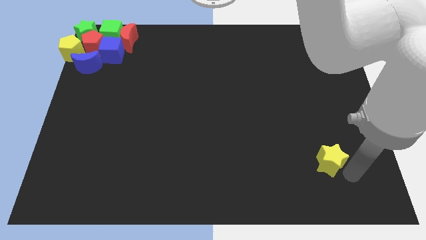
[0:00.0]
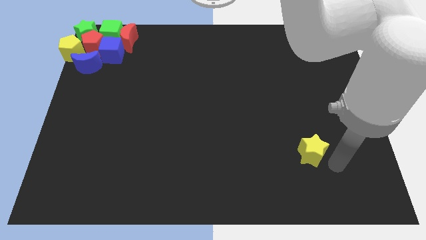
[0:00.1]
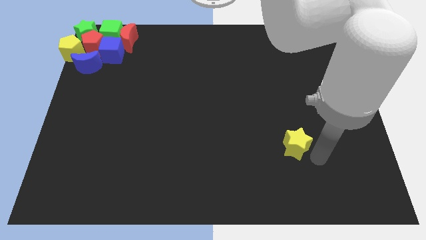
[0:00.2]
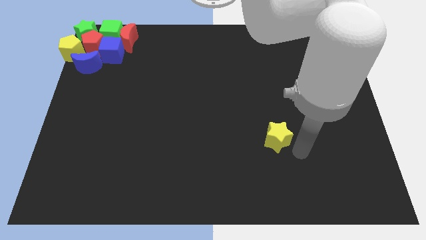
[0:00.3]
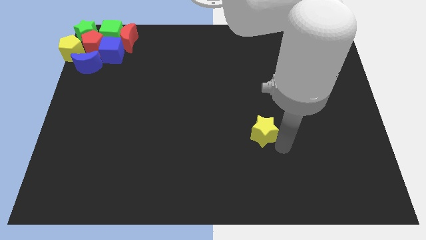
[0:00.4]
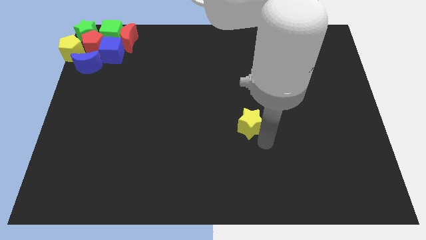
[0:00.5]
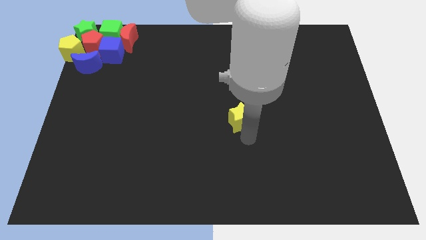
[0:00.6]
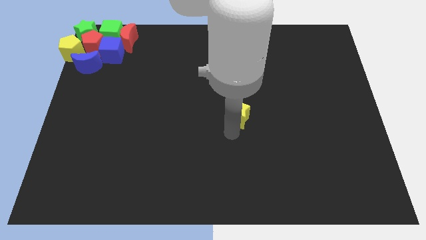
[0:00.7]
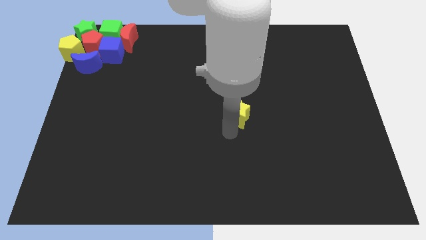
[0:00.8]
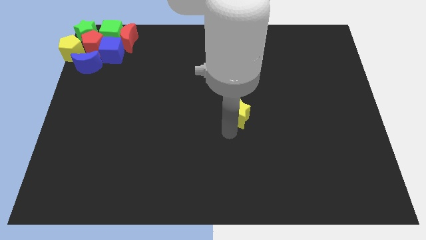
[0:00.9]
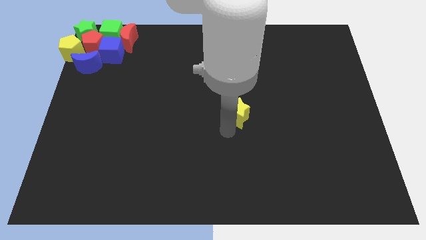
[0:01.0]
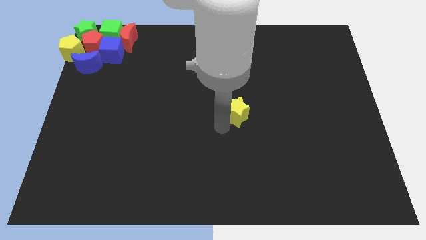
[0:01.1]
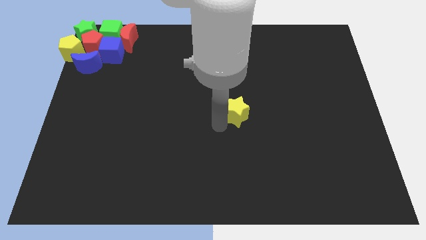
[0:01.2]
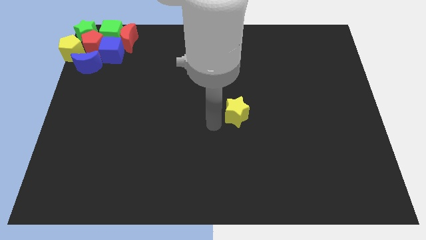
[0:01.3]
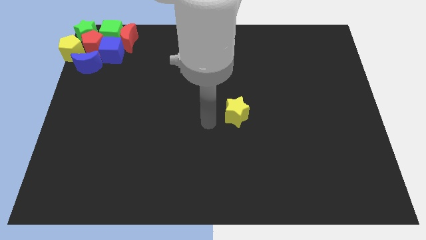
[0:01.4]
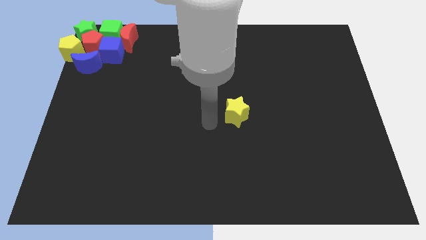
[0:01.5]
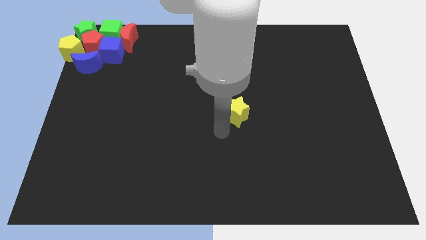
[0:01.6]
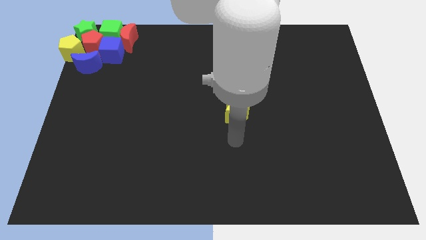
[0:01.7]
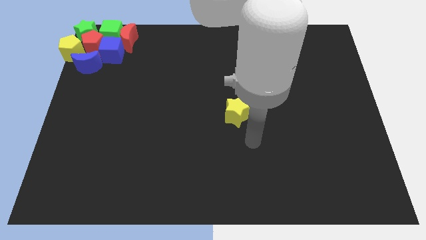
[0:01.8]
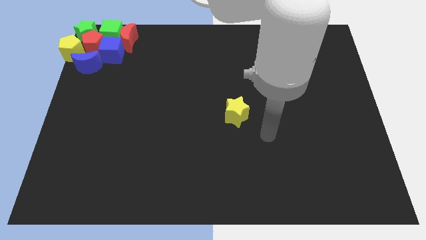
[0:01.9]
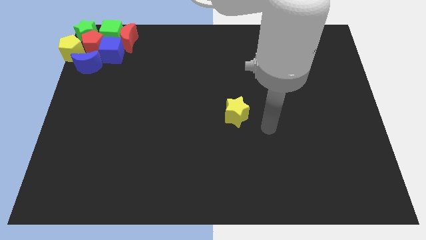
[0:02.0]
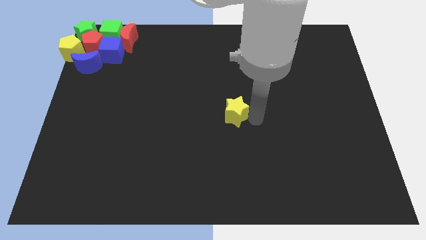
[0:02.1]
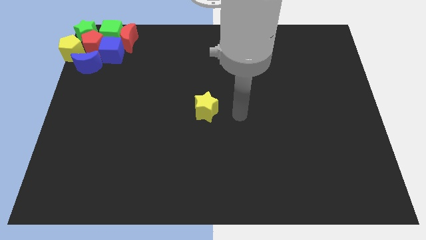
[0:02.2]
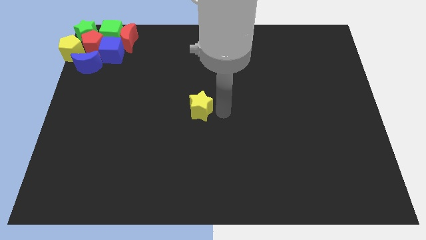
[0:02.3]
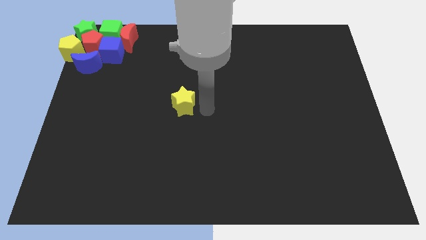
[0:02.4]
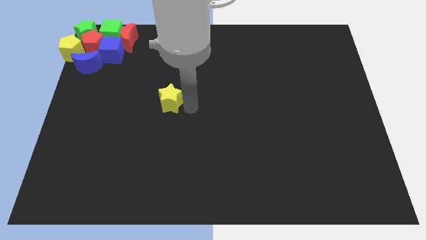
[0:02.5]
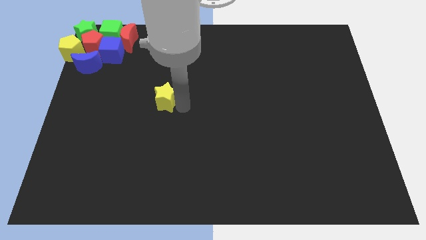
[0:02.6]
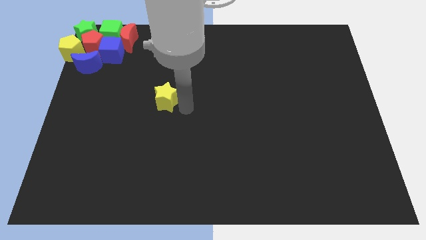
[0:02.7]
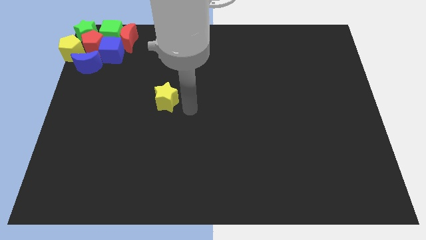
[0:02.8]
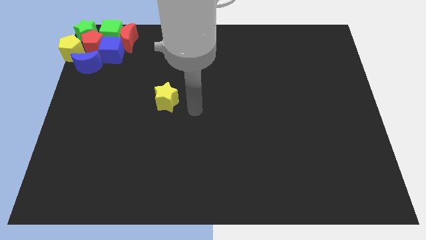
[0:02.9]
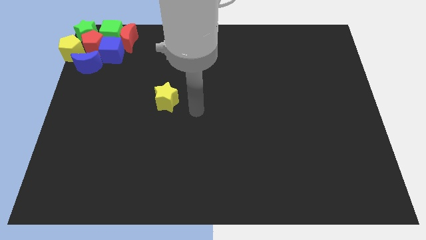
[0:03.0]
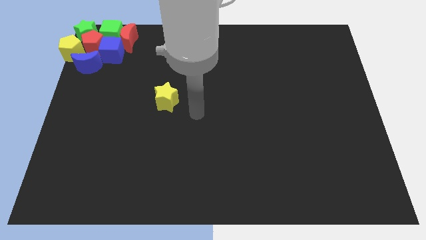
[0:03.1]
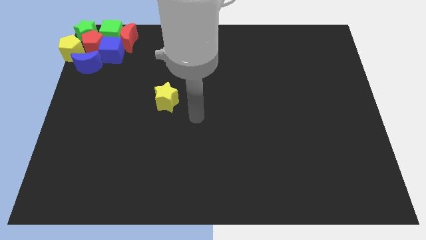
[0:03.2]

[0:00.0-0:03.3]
move the yellow star towards the center of the board

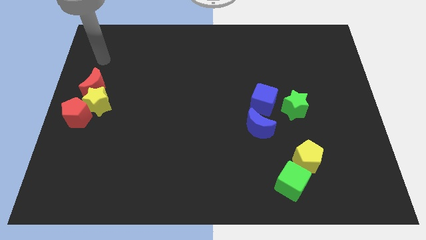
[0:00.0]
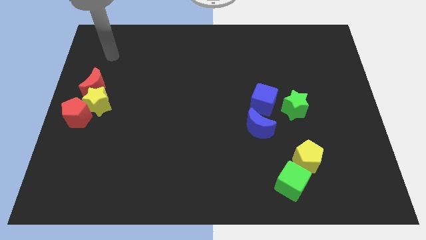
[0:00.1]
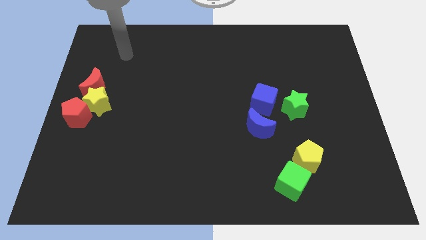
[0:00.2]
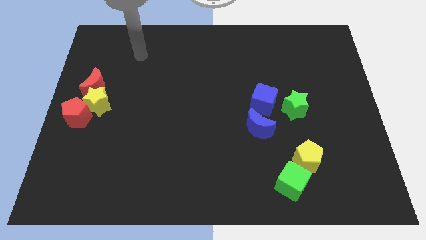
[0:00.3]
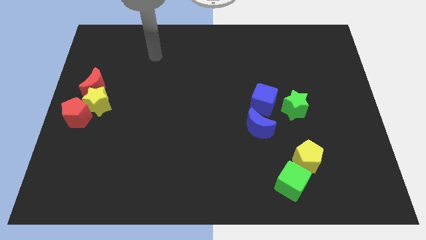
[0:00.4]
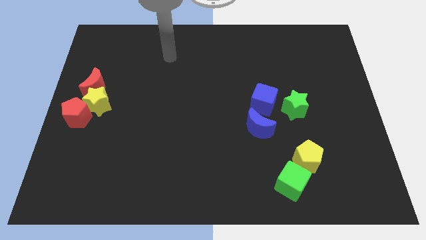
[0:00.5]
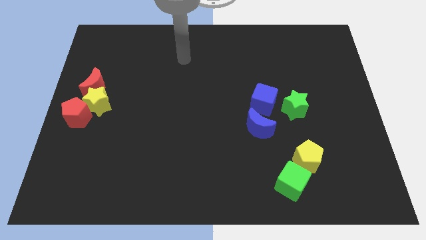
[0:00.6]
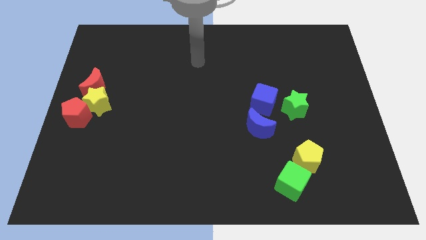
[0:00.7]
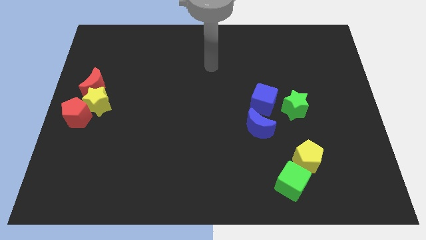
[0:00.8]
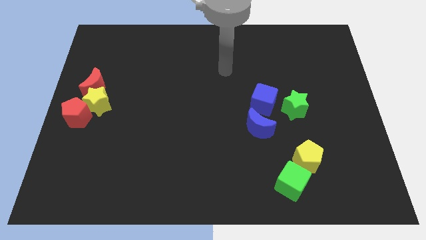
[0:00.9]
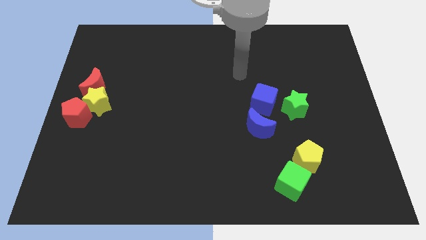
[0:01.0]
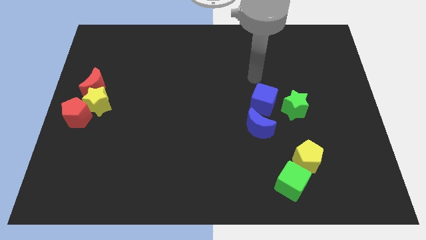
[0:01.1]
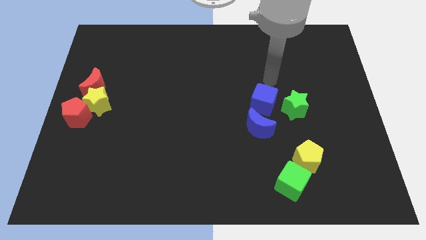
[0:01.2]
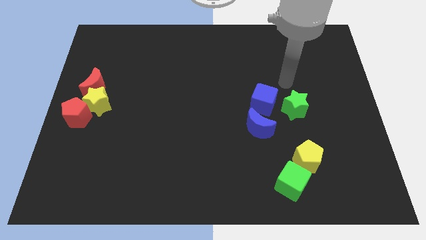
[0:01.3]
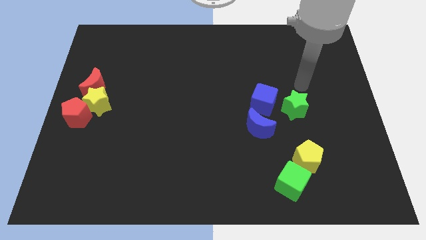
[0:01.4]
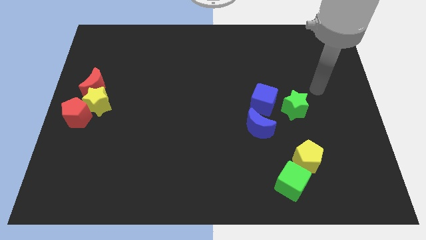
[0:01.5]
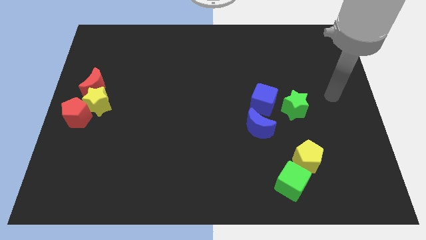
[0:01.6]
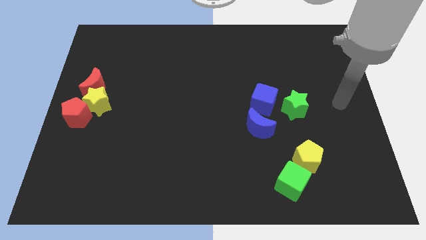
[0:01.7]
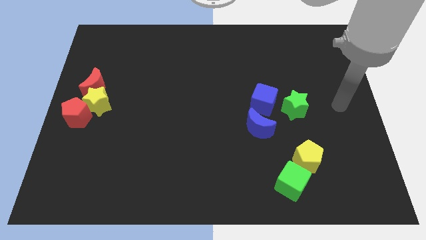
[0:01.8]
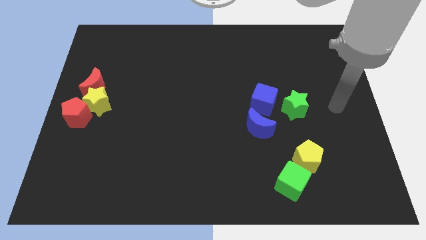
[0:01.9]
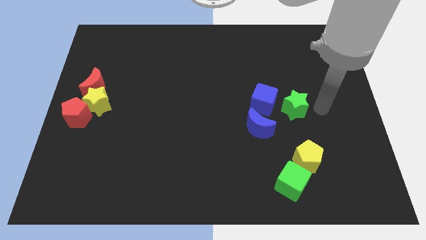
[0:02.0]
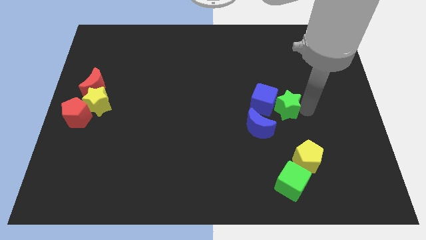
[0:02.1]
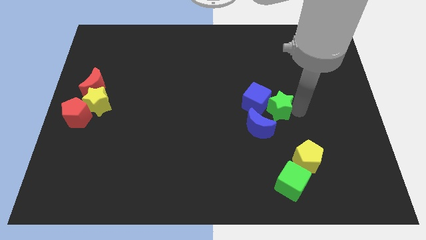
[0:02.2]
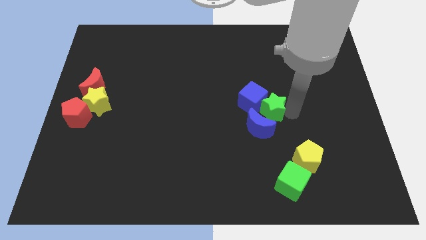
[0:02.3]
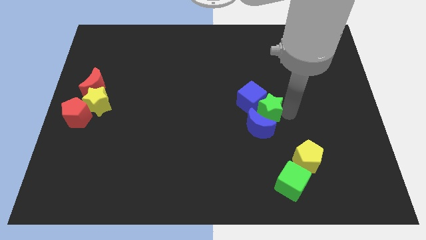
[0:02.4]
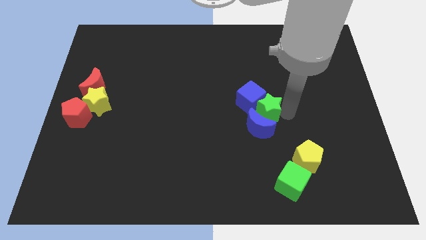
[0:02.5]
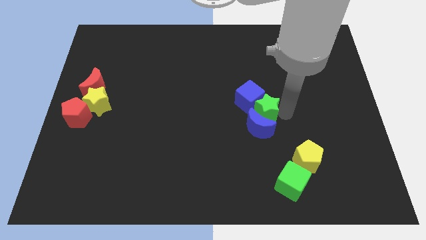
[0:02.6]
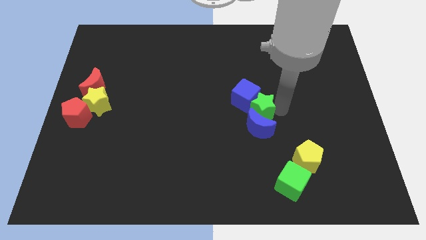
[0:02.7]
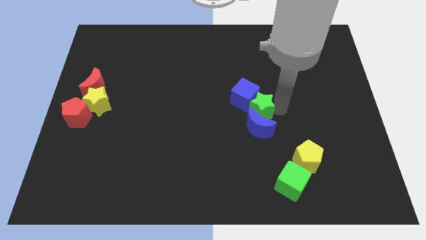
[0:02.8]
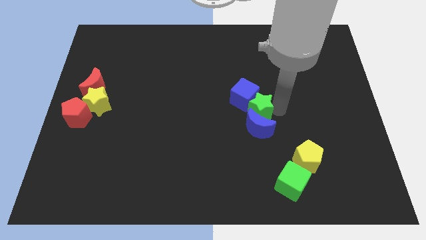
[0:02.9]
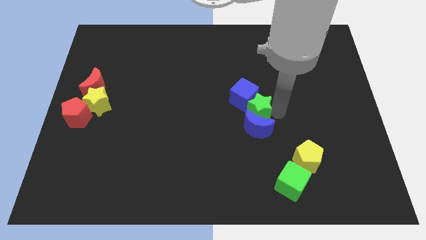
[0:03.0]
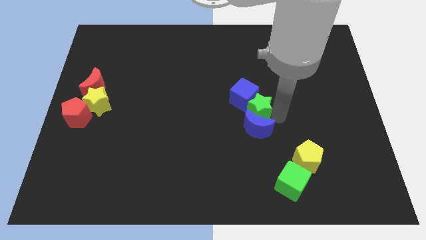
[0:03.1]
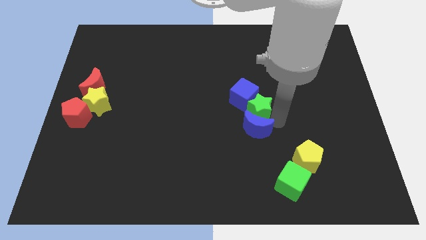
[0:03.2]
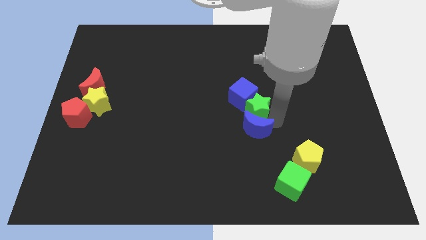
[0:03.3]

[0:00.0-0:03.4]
push the green star to the top of the of the blue crescent

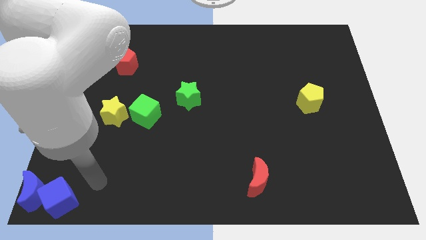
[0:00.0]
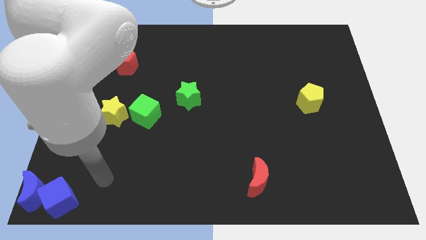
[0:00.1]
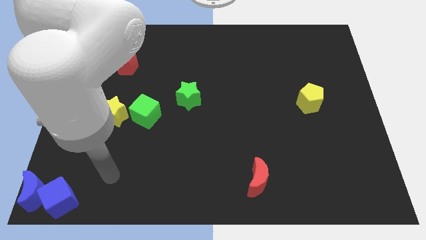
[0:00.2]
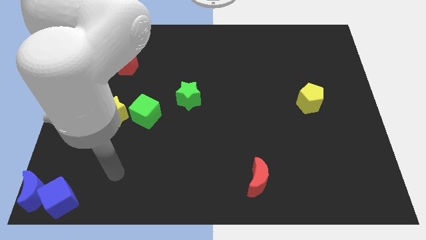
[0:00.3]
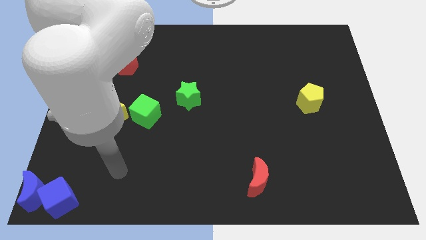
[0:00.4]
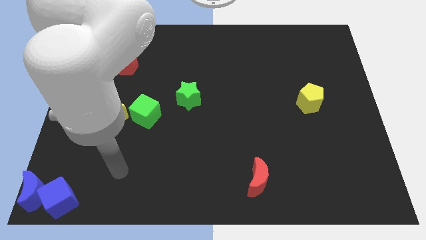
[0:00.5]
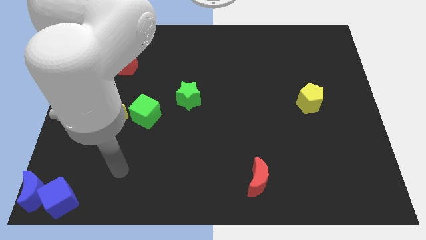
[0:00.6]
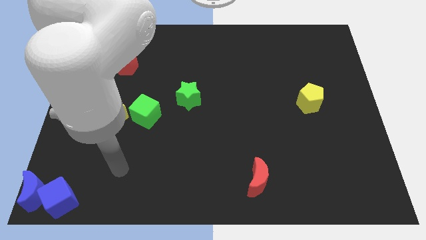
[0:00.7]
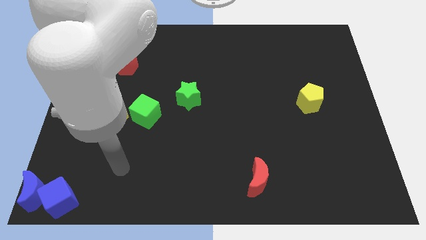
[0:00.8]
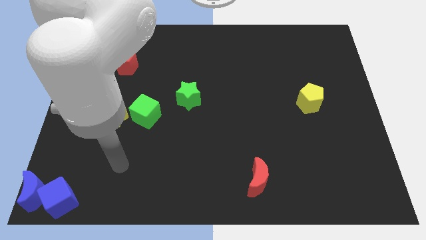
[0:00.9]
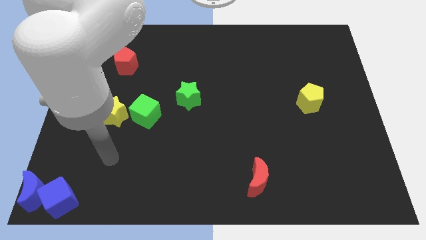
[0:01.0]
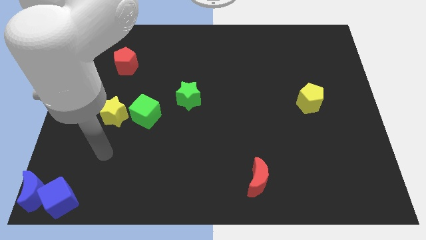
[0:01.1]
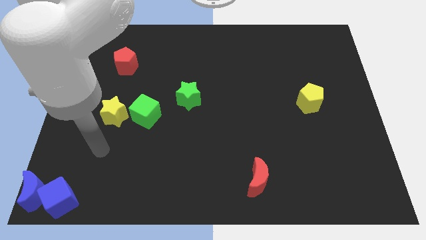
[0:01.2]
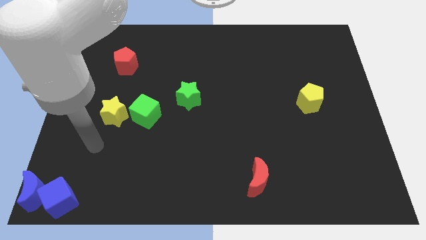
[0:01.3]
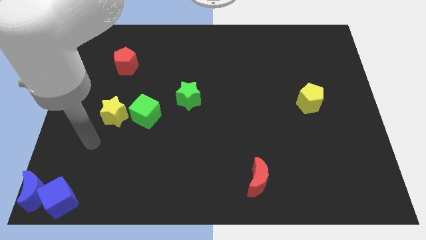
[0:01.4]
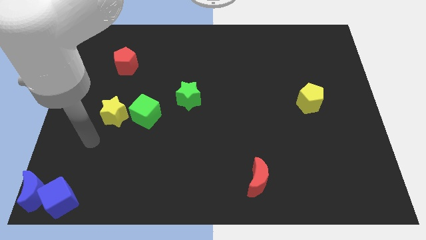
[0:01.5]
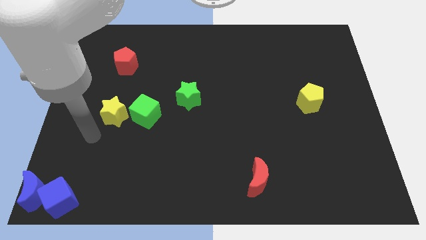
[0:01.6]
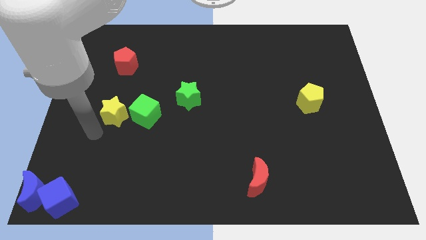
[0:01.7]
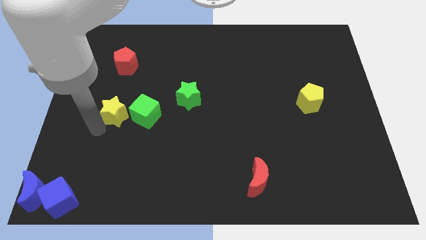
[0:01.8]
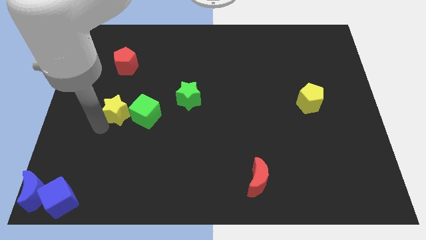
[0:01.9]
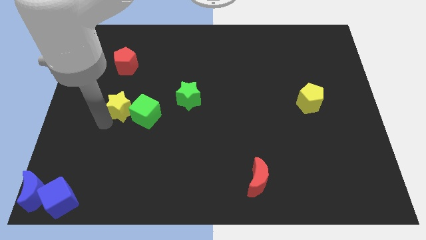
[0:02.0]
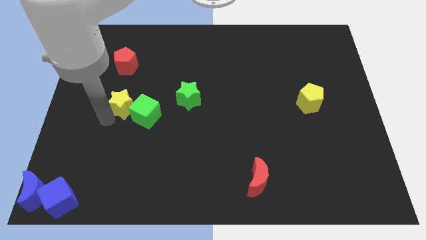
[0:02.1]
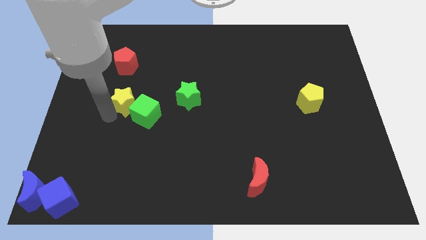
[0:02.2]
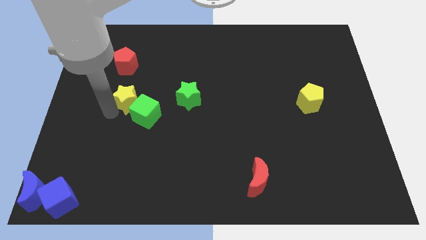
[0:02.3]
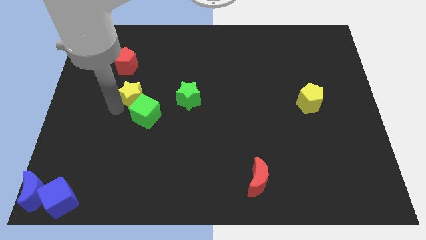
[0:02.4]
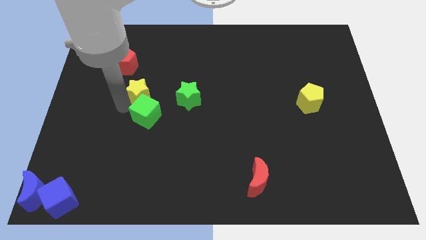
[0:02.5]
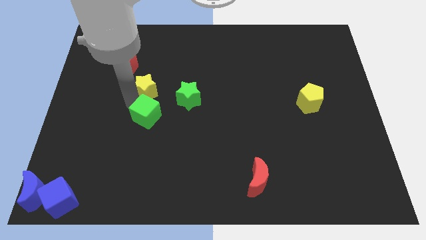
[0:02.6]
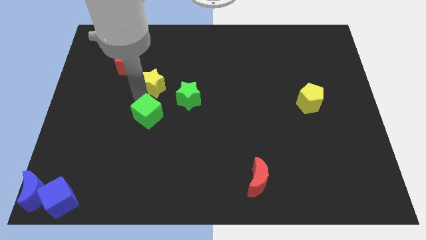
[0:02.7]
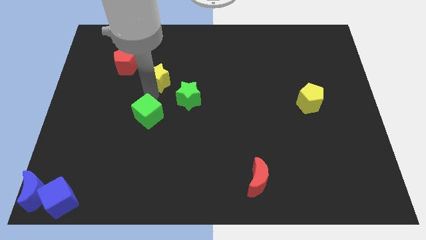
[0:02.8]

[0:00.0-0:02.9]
slightly move the yellow star towards the top of the board
